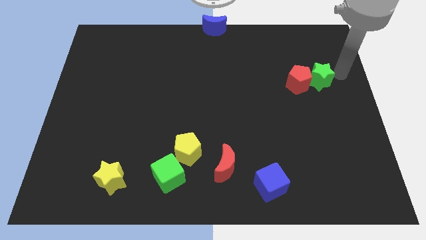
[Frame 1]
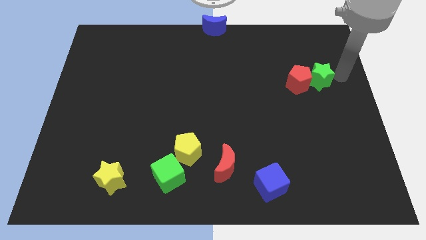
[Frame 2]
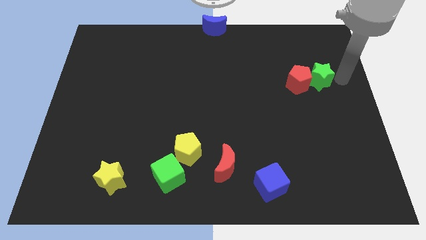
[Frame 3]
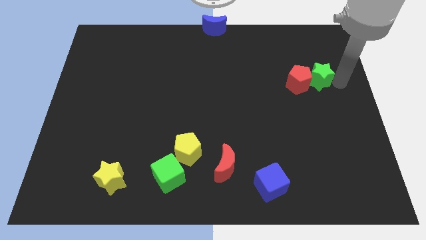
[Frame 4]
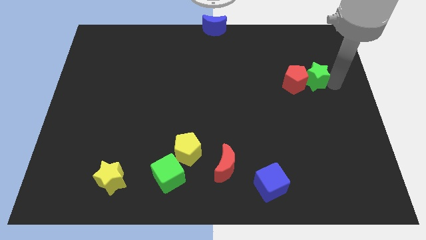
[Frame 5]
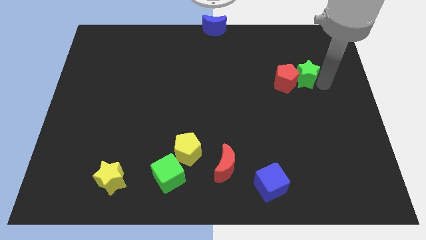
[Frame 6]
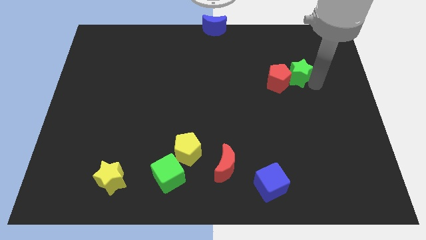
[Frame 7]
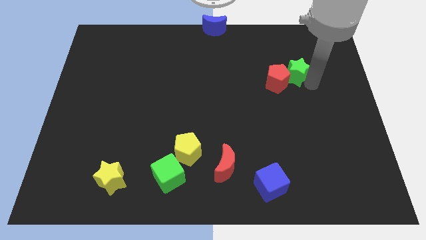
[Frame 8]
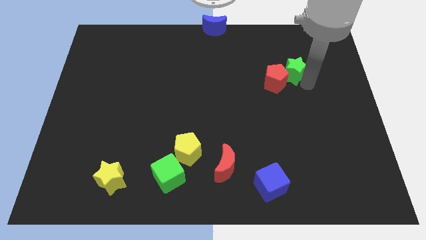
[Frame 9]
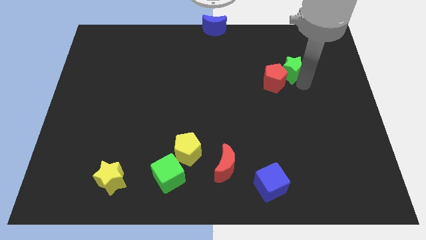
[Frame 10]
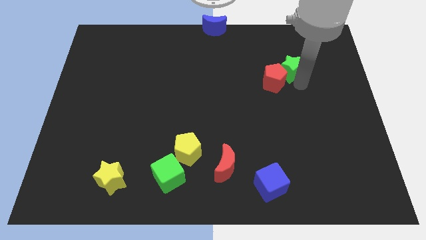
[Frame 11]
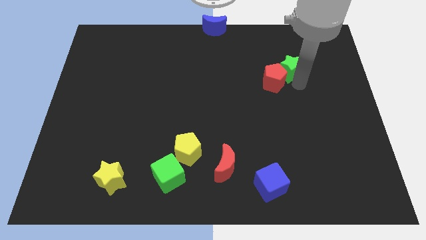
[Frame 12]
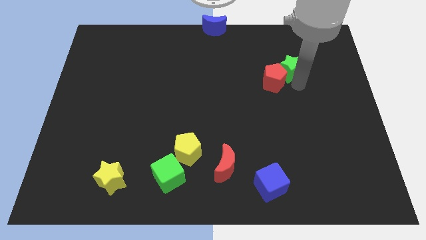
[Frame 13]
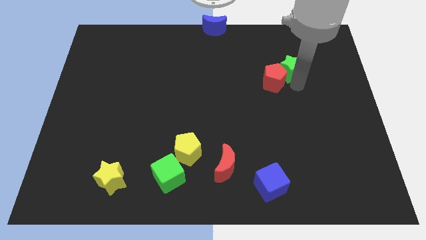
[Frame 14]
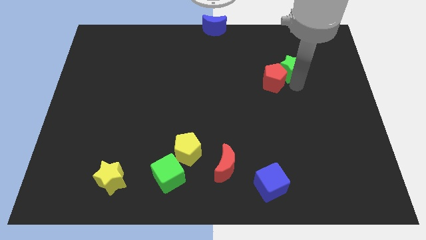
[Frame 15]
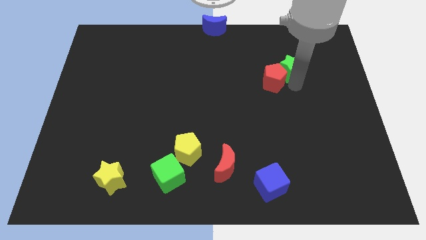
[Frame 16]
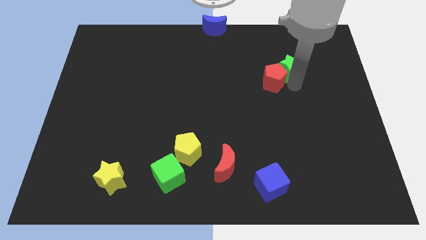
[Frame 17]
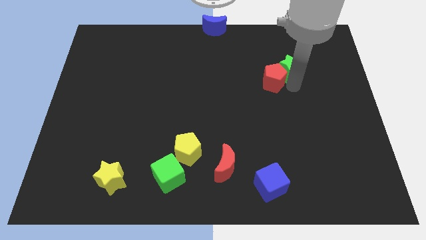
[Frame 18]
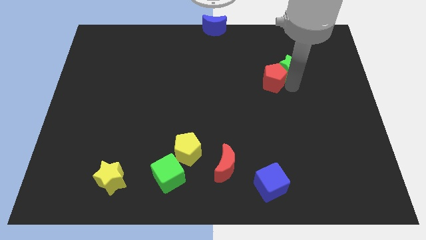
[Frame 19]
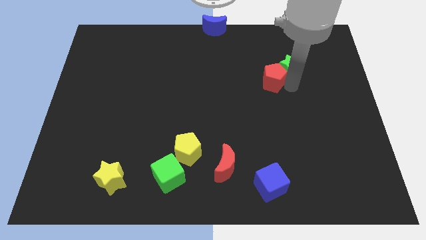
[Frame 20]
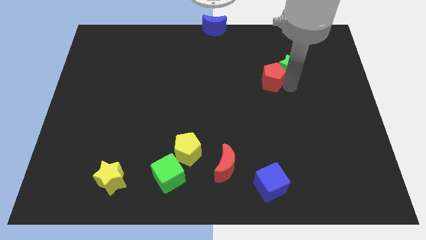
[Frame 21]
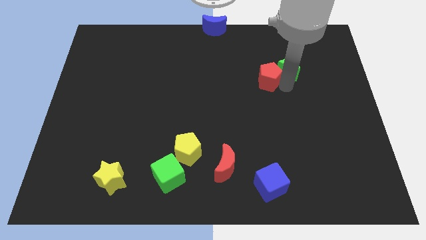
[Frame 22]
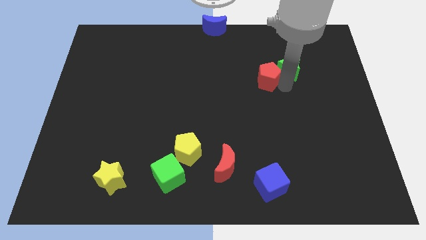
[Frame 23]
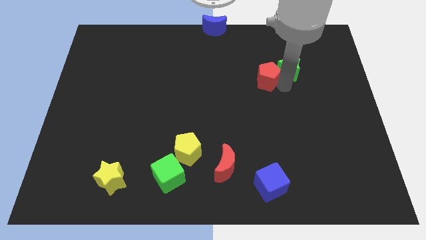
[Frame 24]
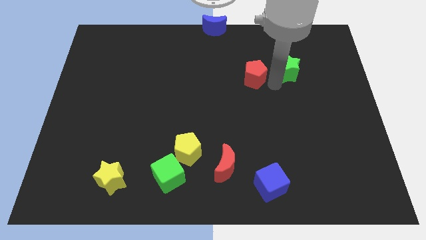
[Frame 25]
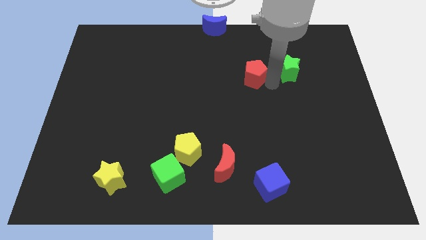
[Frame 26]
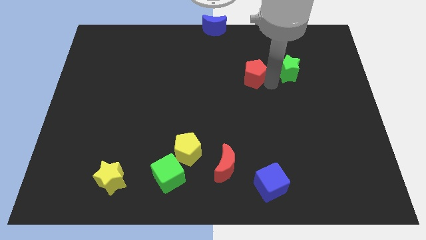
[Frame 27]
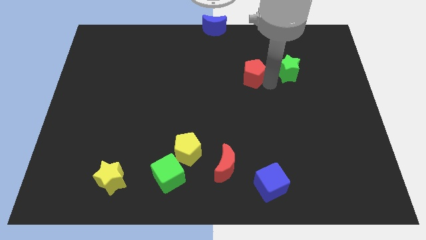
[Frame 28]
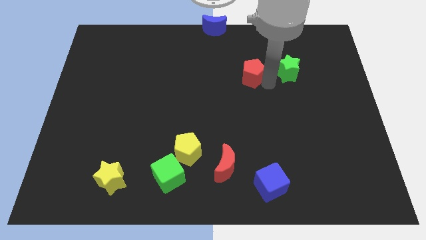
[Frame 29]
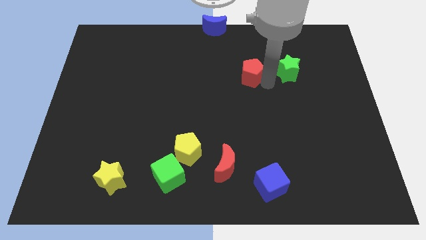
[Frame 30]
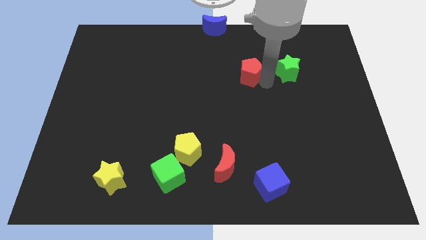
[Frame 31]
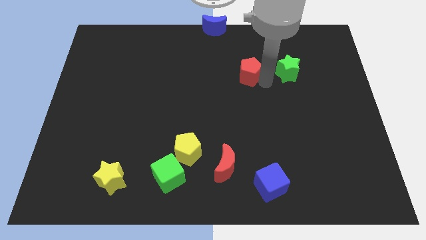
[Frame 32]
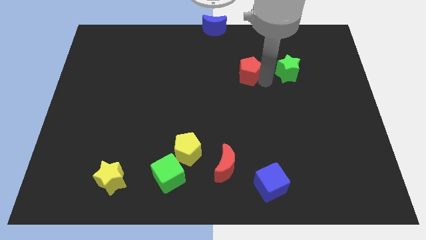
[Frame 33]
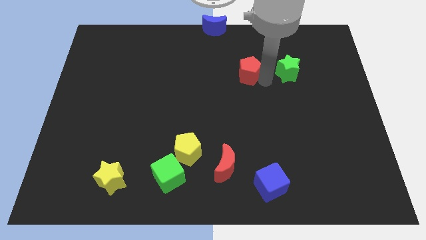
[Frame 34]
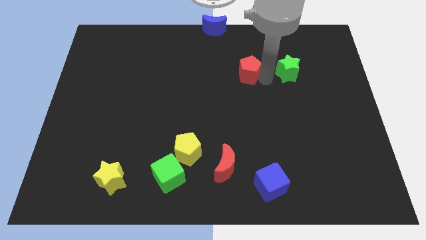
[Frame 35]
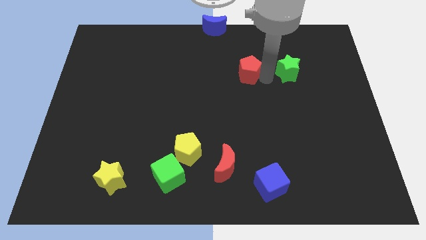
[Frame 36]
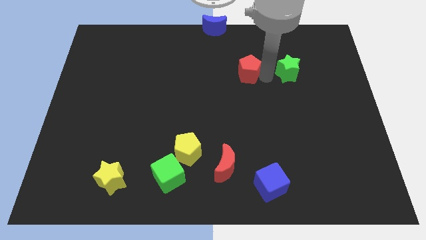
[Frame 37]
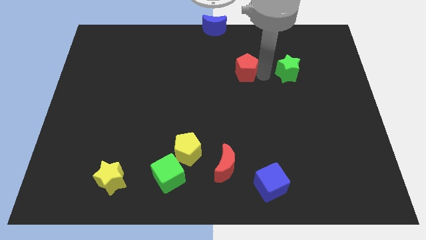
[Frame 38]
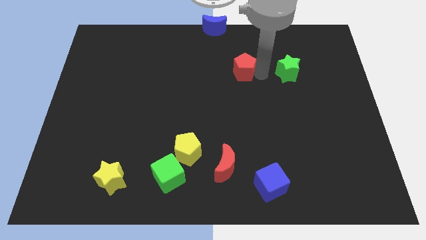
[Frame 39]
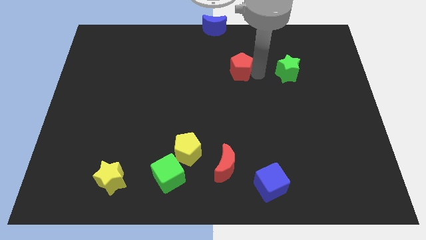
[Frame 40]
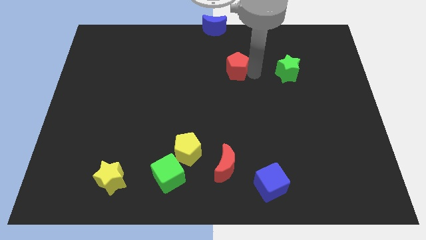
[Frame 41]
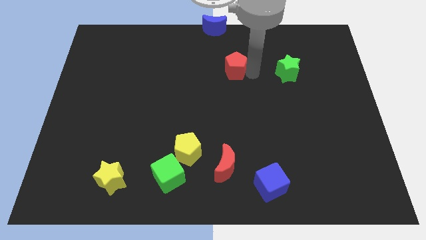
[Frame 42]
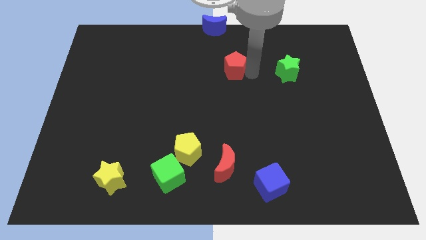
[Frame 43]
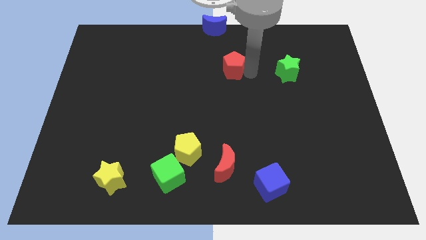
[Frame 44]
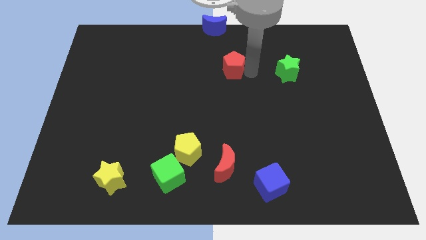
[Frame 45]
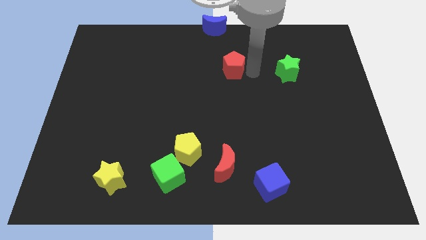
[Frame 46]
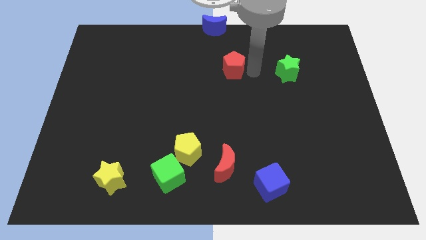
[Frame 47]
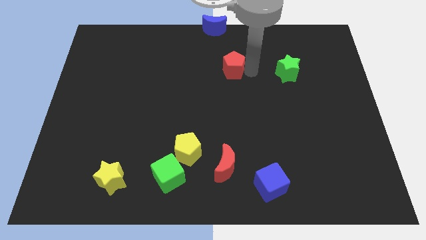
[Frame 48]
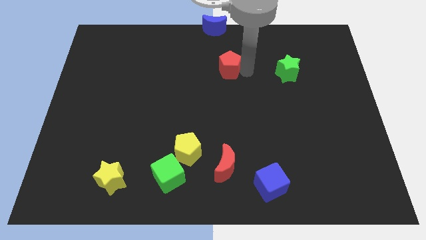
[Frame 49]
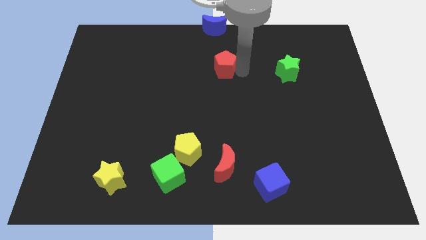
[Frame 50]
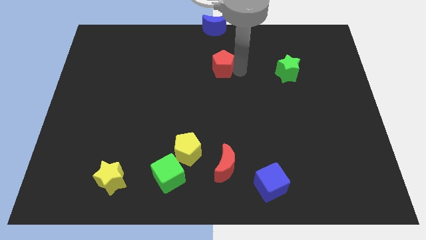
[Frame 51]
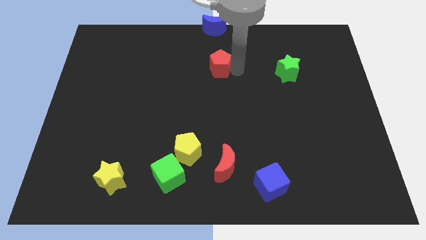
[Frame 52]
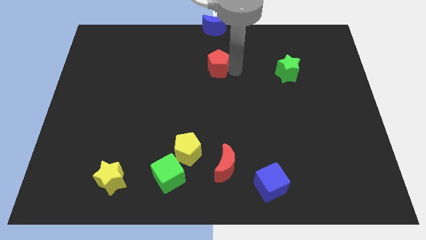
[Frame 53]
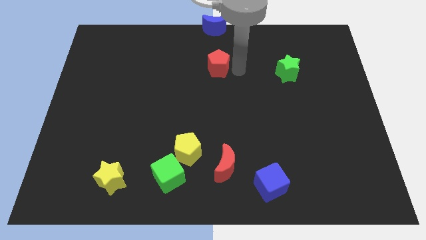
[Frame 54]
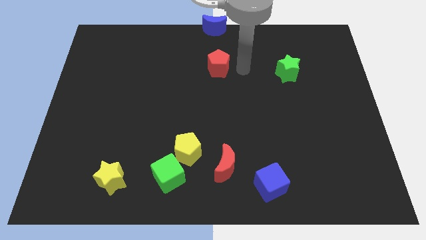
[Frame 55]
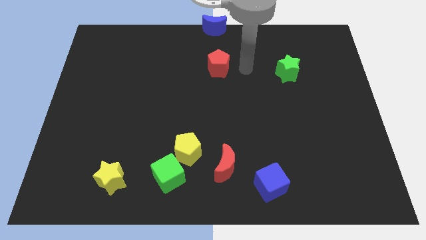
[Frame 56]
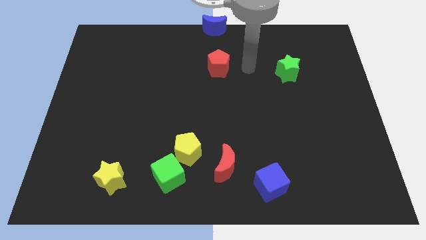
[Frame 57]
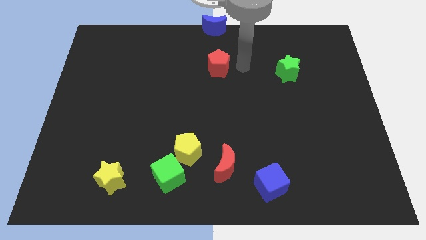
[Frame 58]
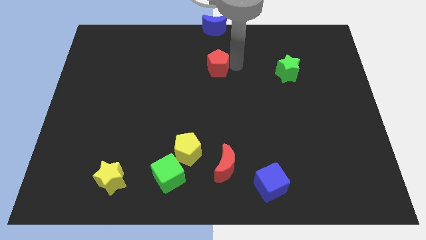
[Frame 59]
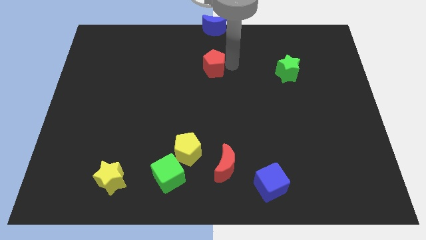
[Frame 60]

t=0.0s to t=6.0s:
place the red pentagon below the blue moon

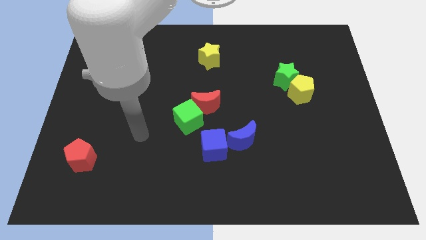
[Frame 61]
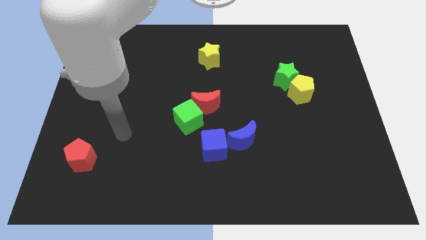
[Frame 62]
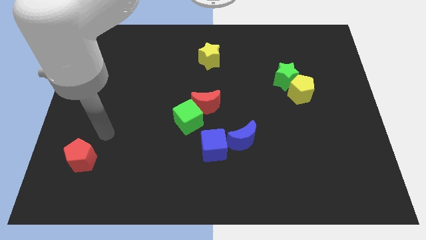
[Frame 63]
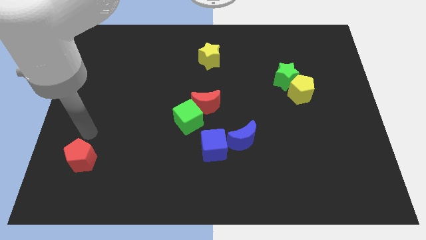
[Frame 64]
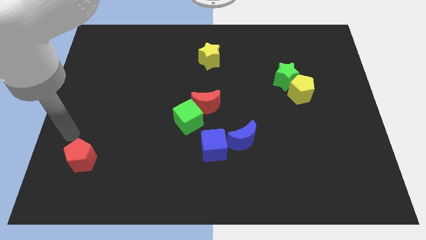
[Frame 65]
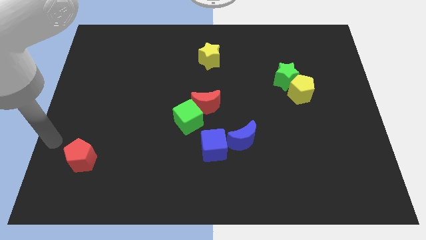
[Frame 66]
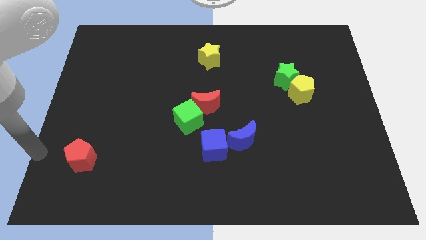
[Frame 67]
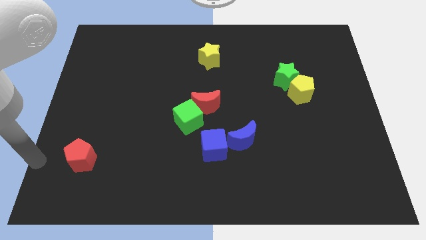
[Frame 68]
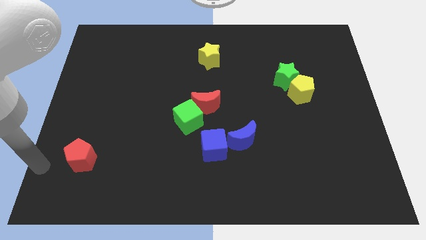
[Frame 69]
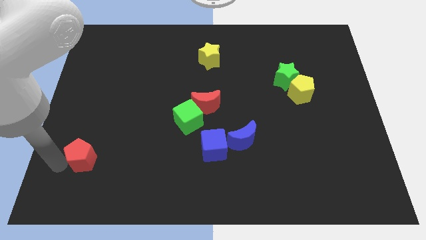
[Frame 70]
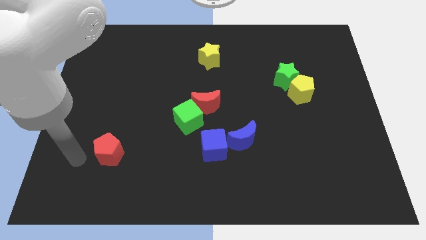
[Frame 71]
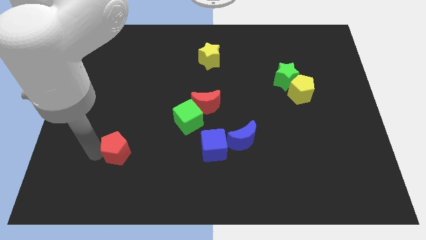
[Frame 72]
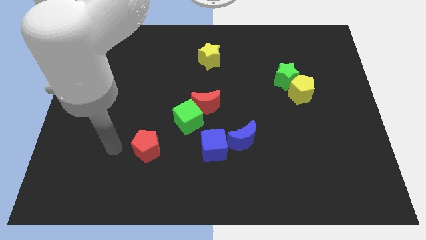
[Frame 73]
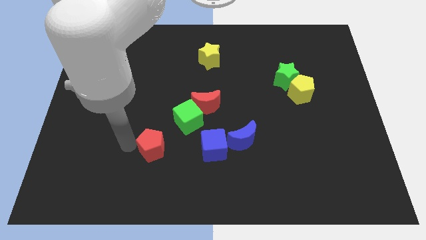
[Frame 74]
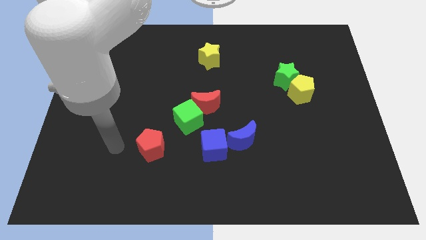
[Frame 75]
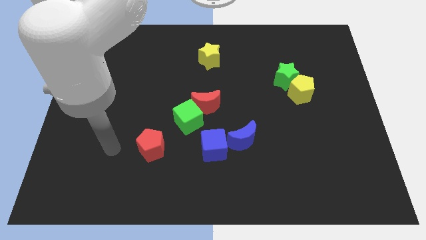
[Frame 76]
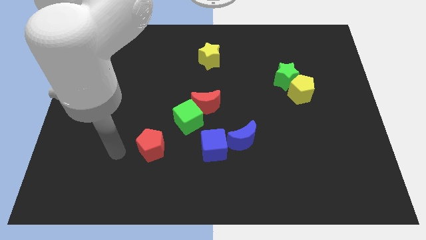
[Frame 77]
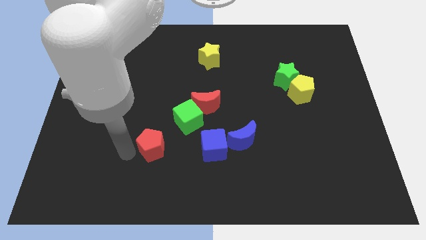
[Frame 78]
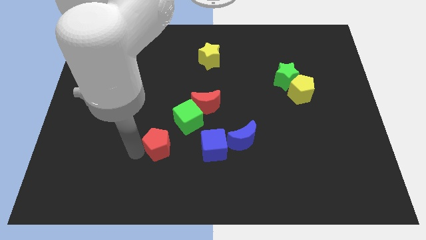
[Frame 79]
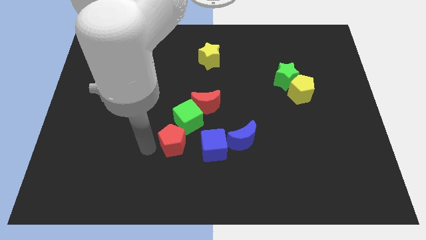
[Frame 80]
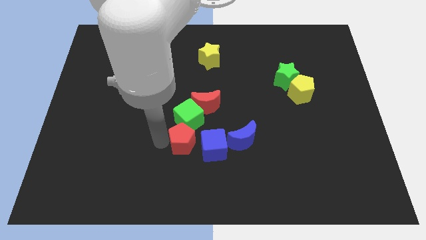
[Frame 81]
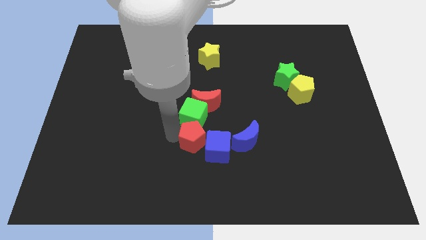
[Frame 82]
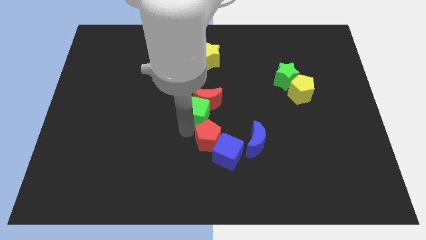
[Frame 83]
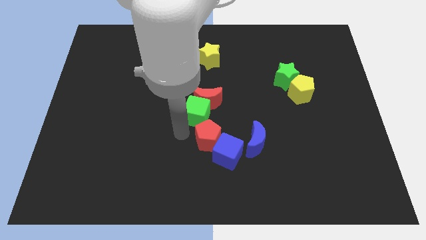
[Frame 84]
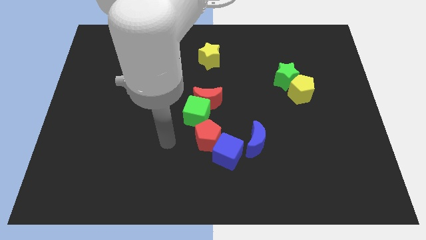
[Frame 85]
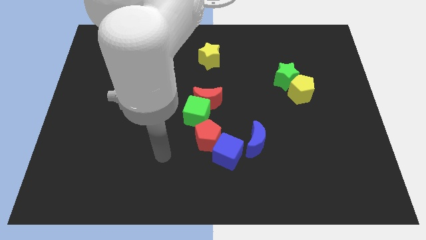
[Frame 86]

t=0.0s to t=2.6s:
move the red pentagon between green and blue cubes

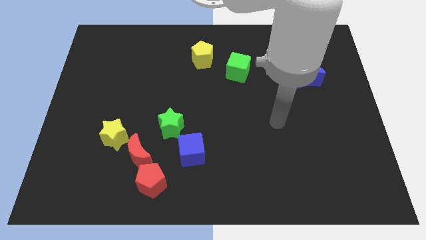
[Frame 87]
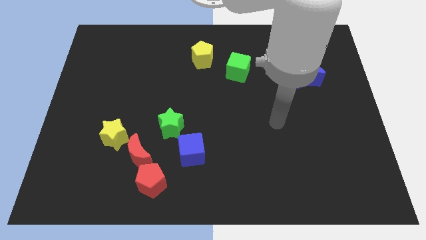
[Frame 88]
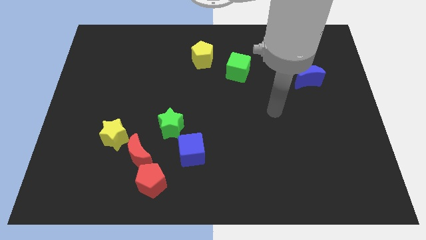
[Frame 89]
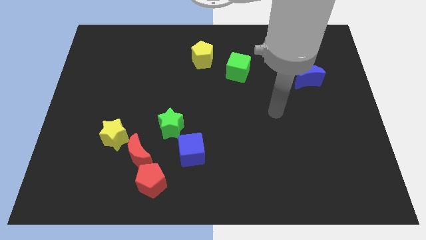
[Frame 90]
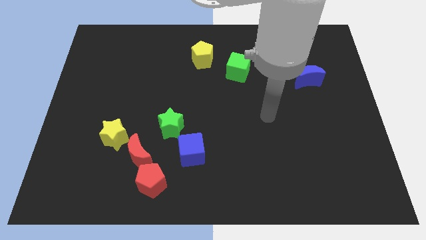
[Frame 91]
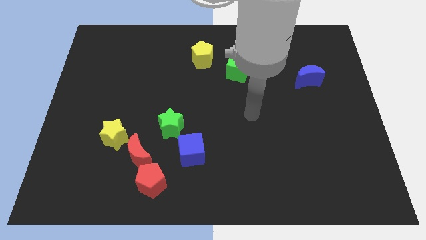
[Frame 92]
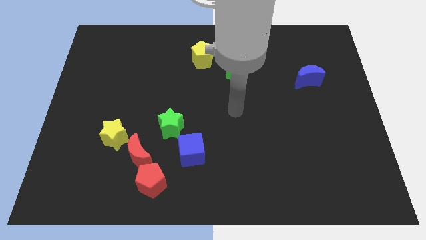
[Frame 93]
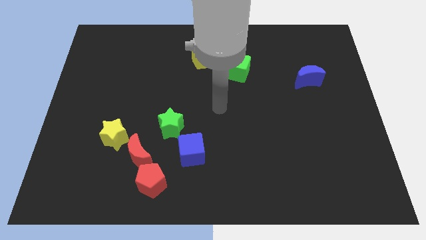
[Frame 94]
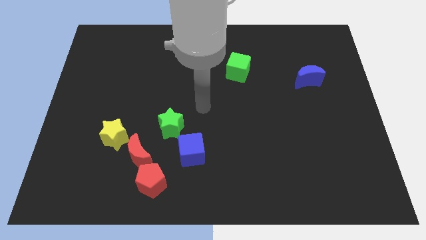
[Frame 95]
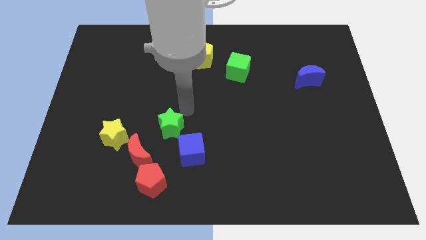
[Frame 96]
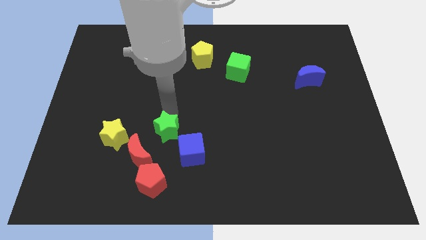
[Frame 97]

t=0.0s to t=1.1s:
place the arm above the green star
